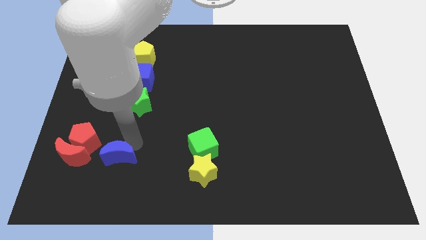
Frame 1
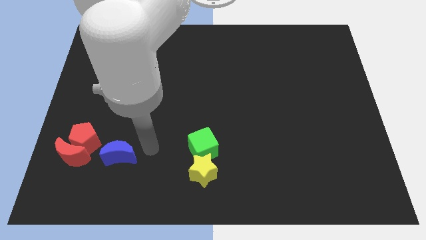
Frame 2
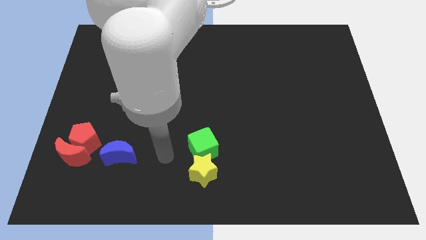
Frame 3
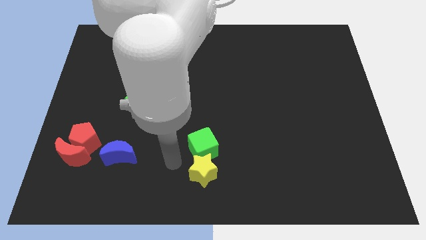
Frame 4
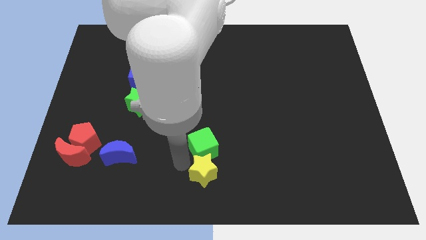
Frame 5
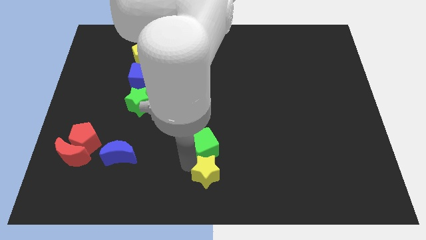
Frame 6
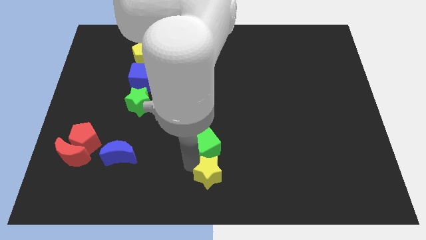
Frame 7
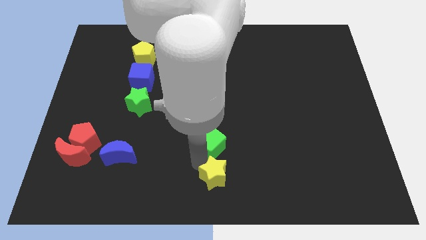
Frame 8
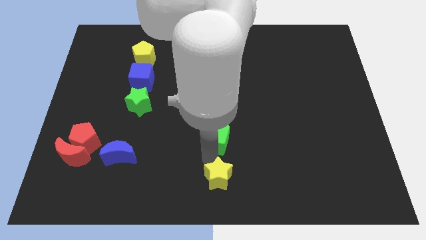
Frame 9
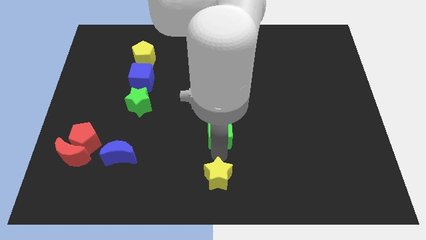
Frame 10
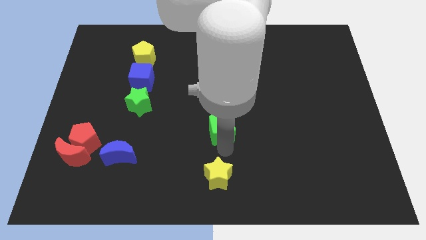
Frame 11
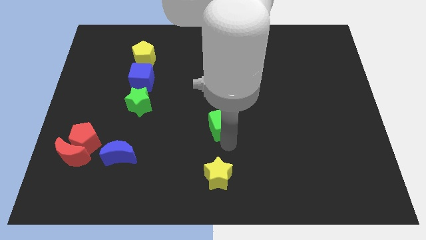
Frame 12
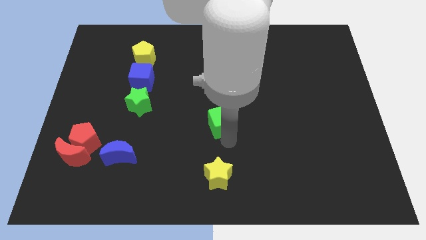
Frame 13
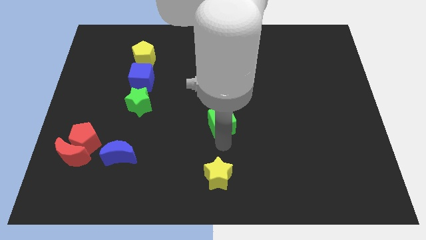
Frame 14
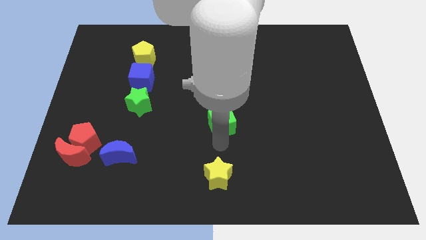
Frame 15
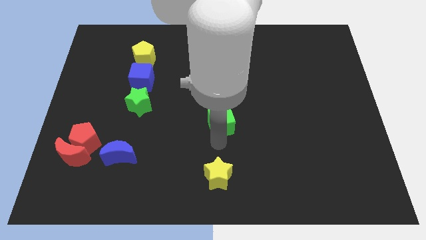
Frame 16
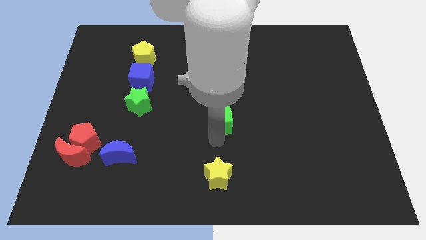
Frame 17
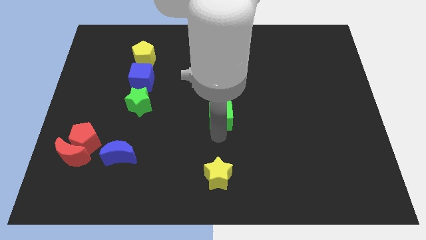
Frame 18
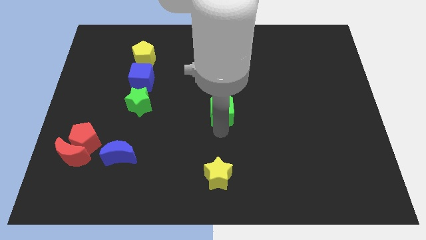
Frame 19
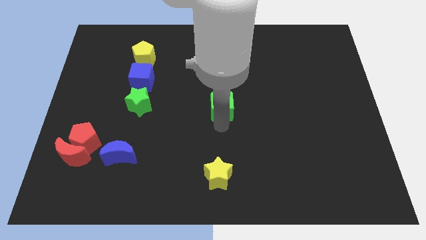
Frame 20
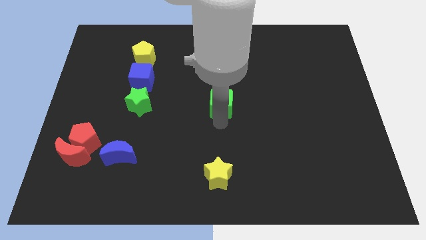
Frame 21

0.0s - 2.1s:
separate the yellow star and the green cube

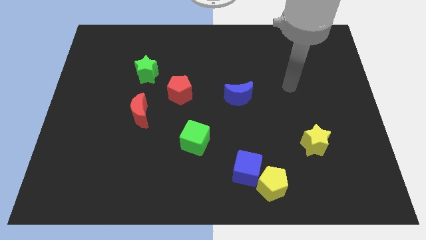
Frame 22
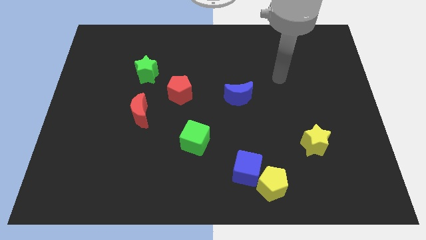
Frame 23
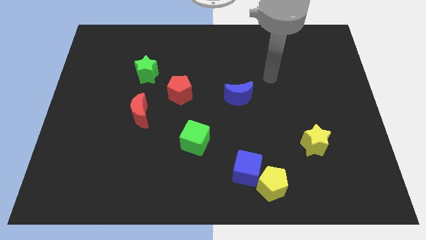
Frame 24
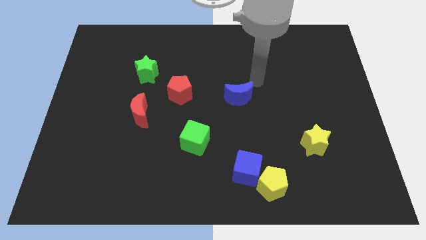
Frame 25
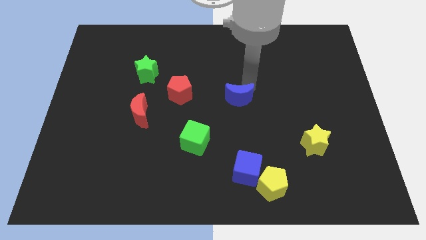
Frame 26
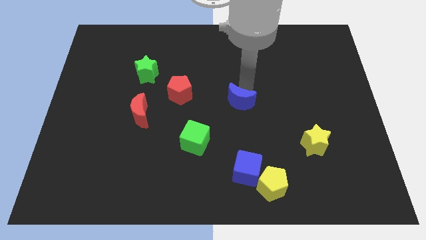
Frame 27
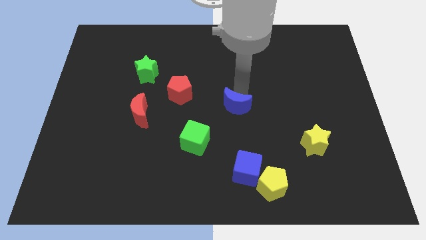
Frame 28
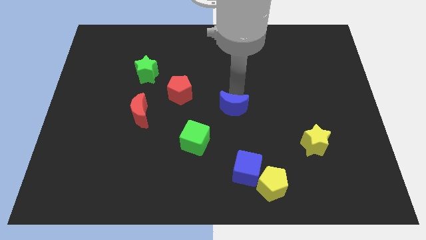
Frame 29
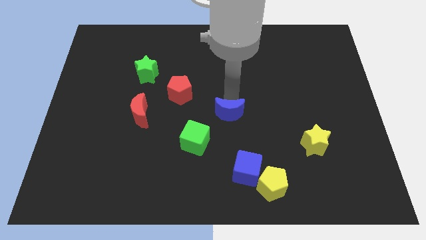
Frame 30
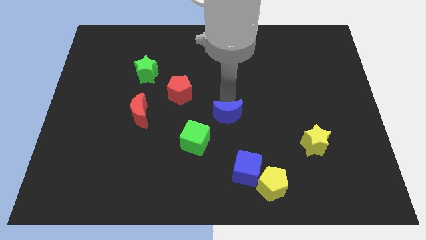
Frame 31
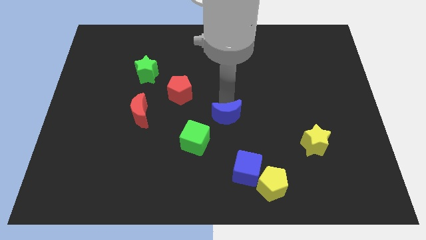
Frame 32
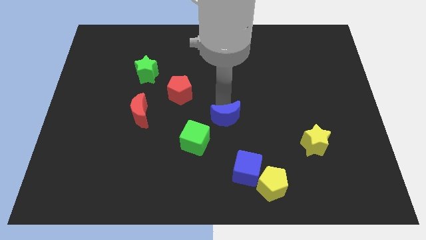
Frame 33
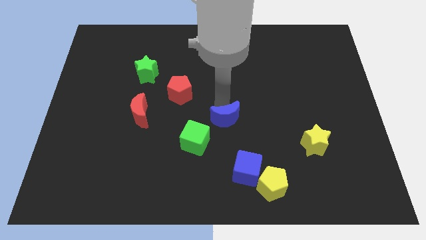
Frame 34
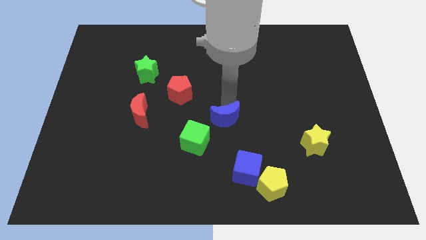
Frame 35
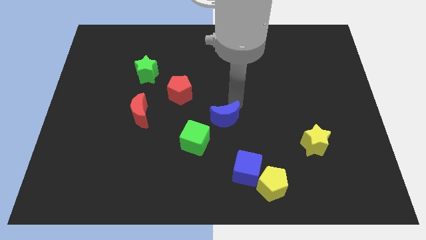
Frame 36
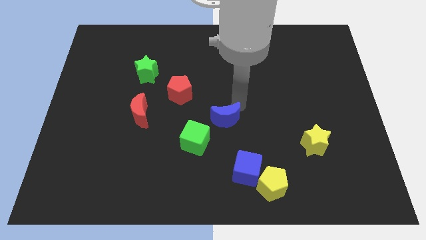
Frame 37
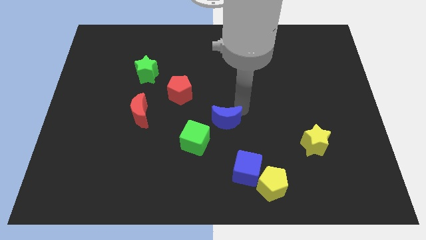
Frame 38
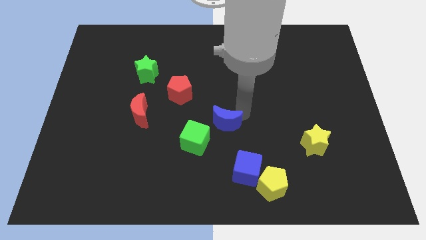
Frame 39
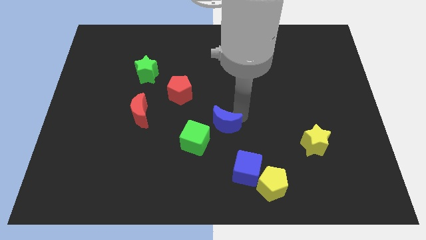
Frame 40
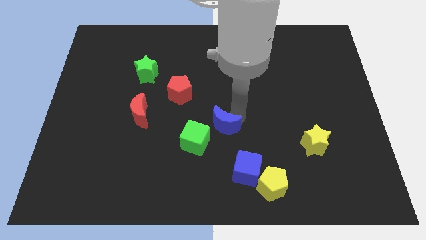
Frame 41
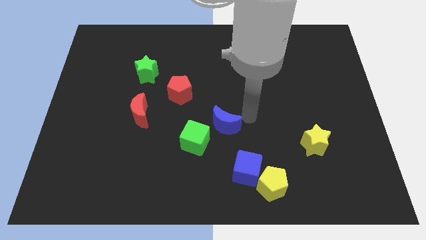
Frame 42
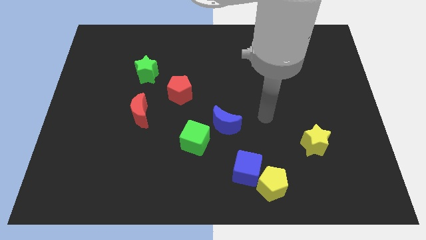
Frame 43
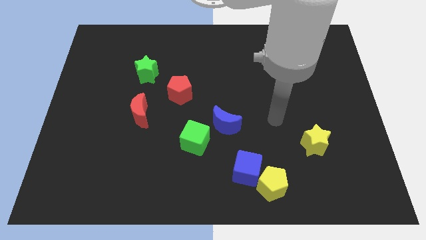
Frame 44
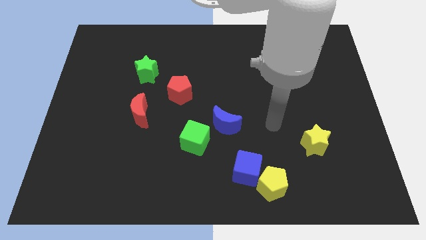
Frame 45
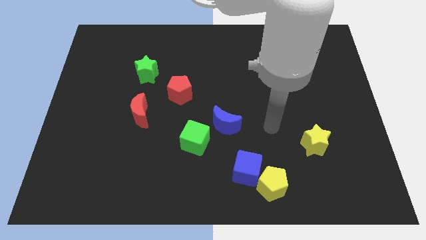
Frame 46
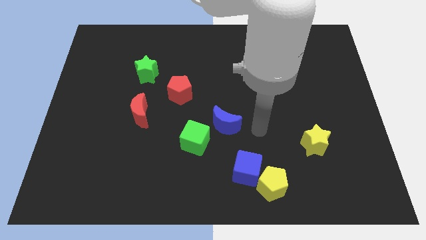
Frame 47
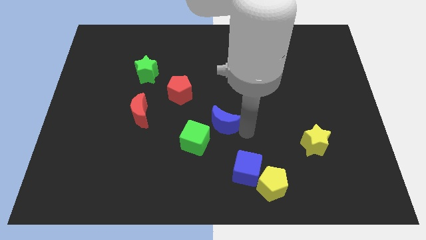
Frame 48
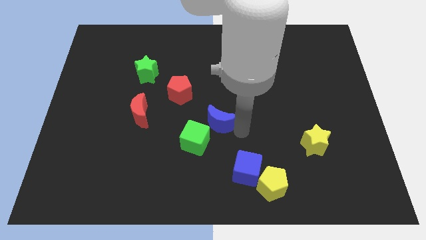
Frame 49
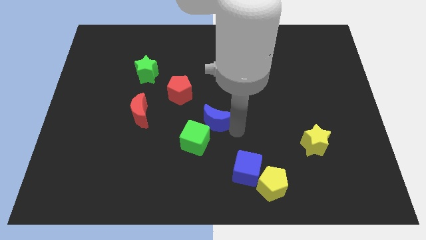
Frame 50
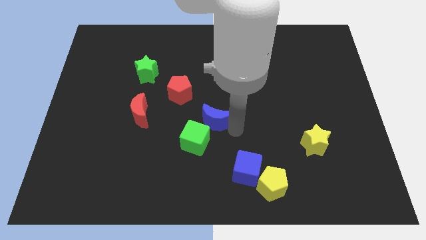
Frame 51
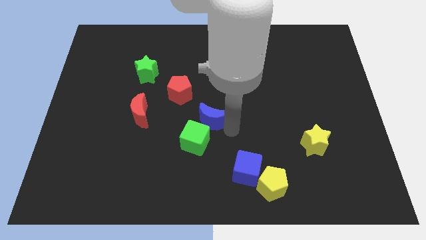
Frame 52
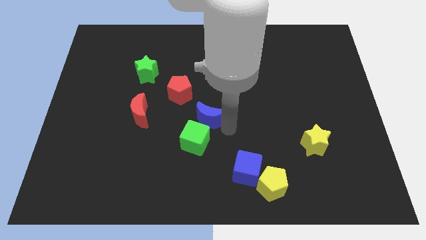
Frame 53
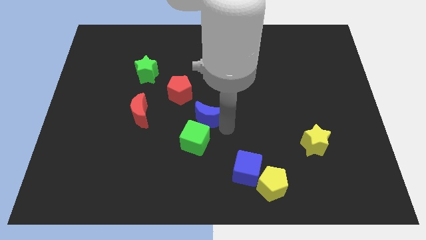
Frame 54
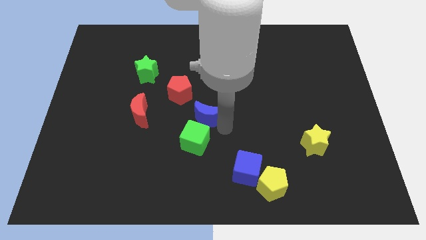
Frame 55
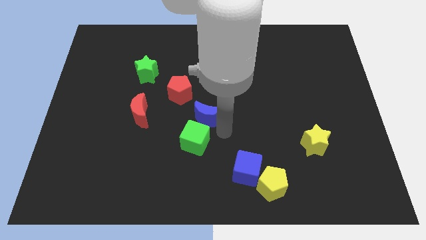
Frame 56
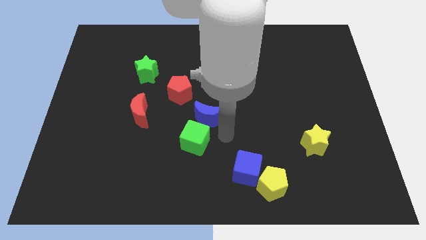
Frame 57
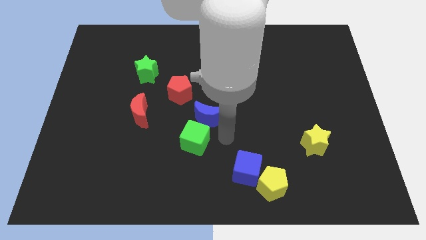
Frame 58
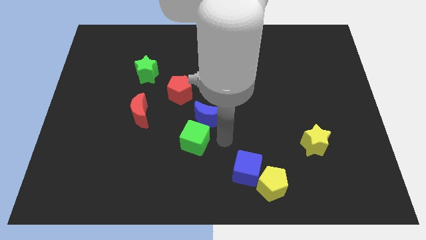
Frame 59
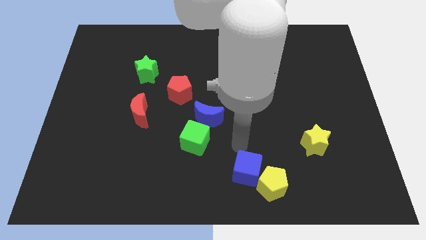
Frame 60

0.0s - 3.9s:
push the blue moon above the green cube

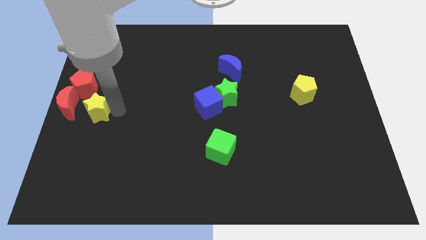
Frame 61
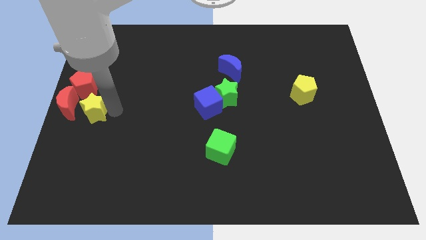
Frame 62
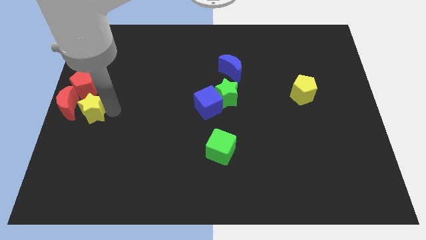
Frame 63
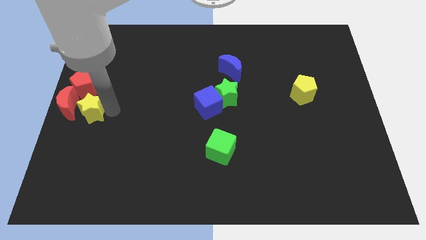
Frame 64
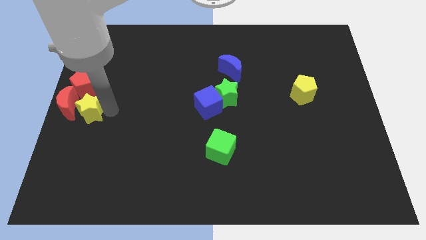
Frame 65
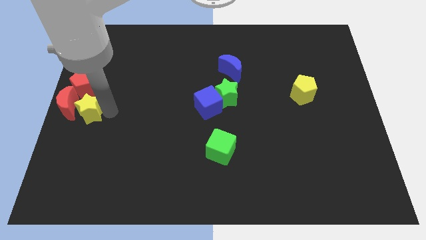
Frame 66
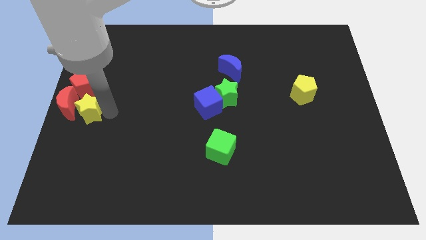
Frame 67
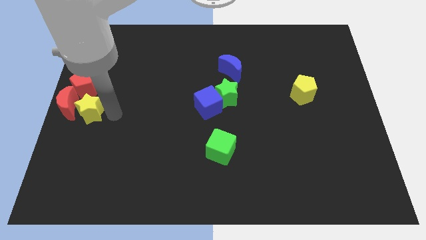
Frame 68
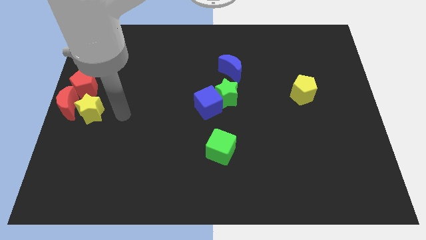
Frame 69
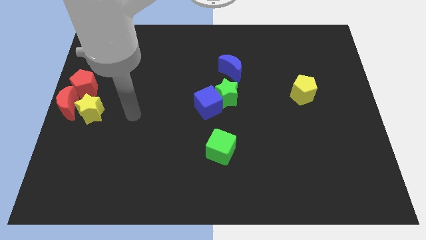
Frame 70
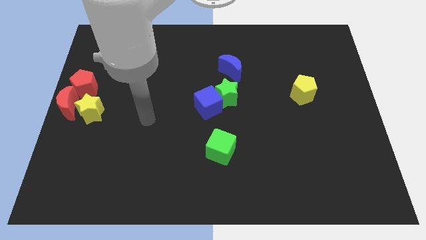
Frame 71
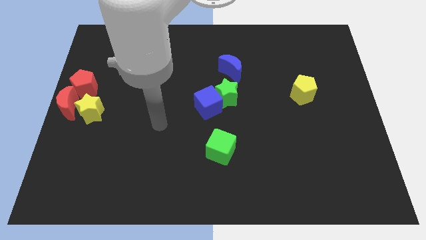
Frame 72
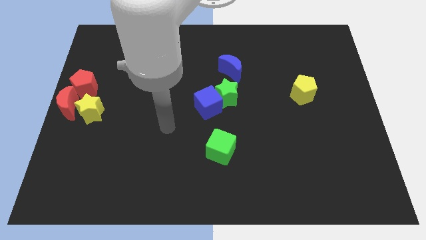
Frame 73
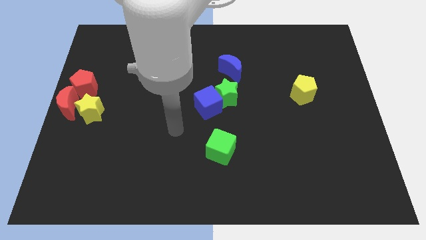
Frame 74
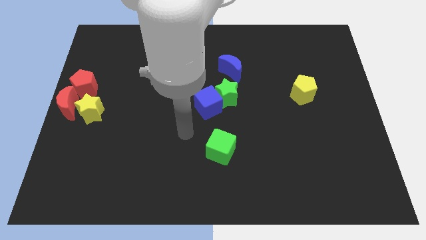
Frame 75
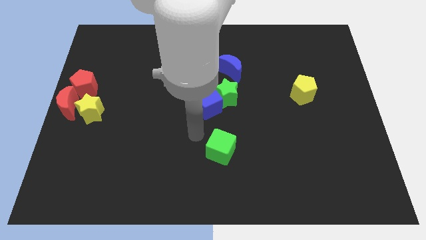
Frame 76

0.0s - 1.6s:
place the yellow star close to the red moon

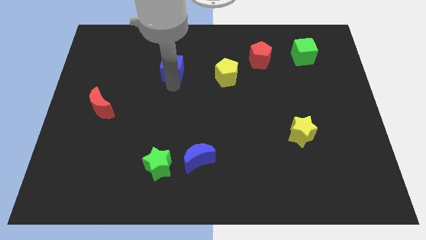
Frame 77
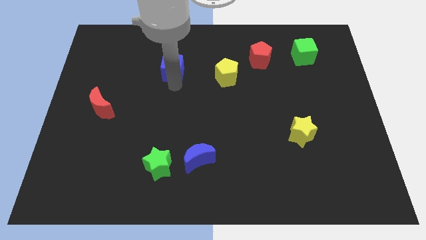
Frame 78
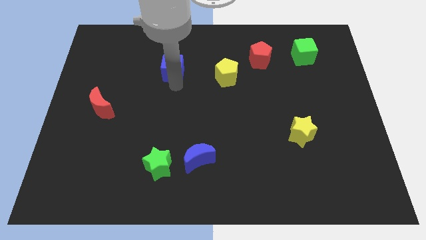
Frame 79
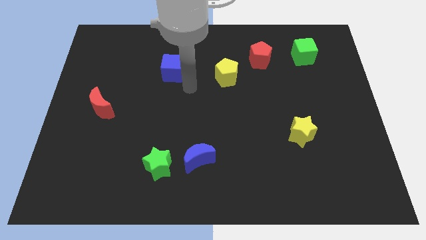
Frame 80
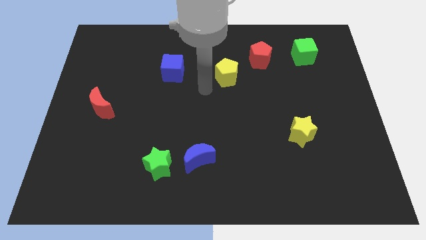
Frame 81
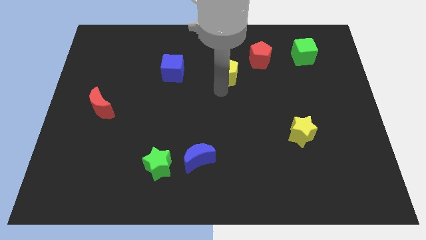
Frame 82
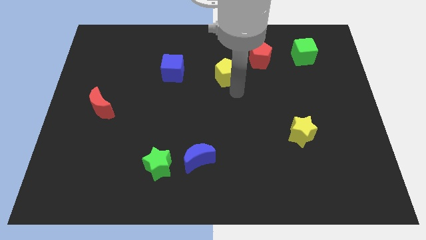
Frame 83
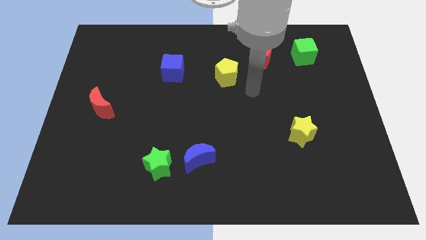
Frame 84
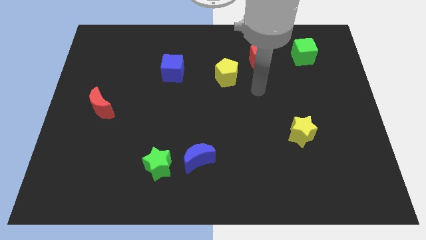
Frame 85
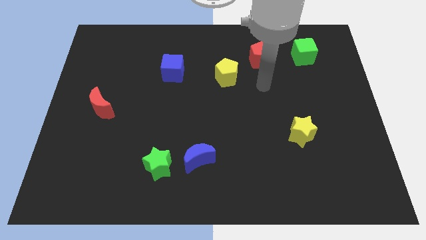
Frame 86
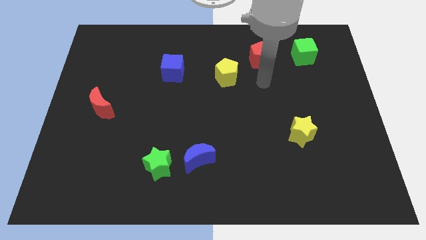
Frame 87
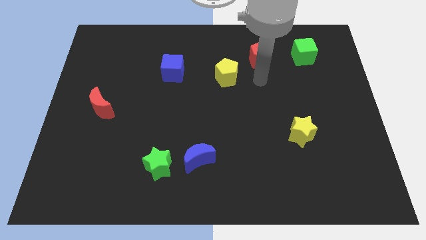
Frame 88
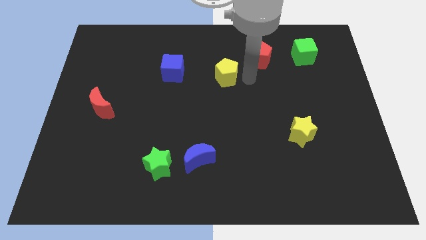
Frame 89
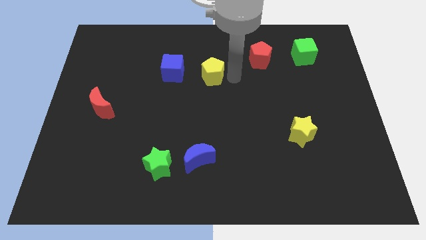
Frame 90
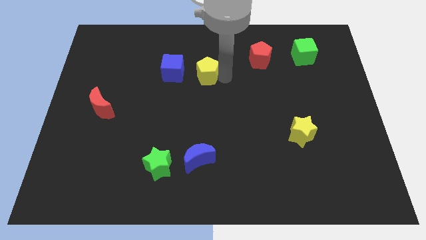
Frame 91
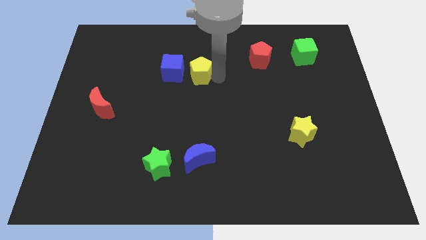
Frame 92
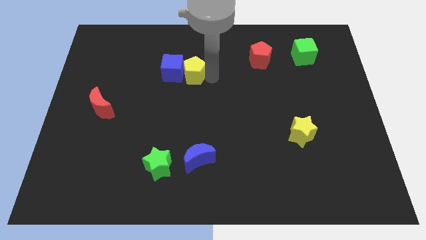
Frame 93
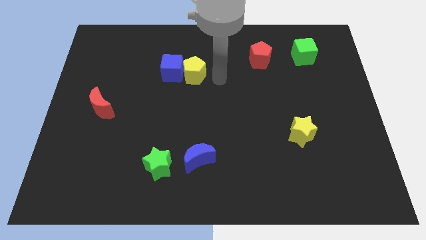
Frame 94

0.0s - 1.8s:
push the yellow pentagon close to the blue cube
